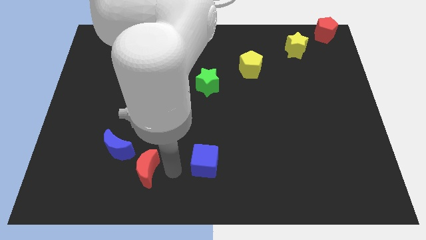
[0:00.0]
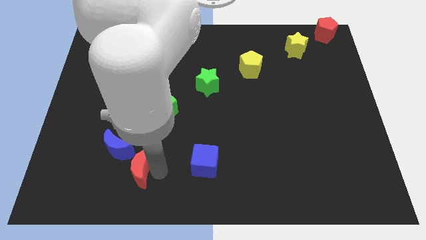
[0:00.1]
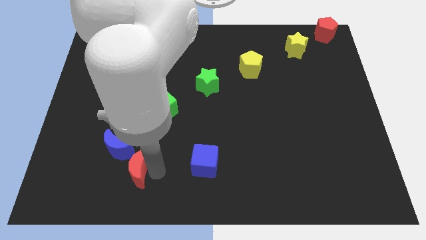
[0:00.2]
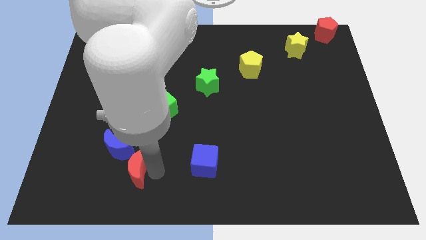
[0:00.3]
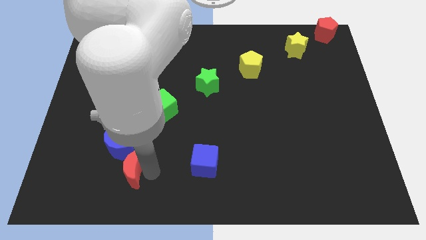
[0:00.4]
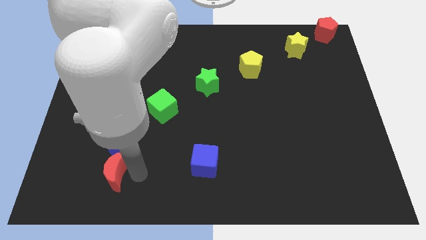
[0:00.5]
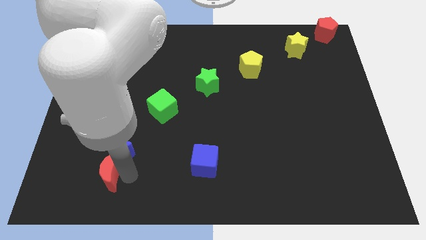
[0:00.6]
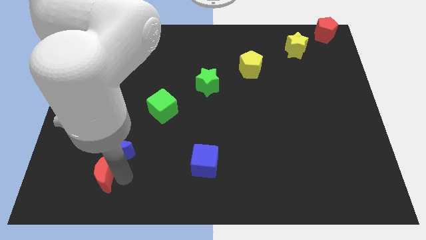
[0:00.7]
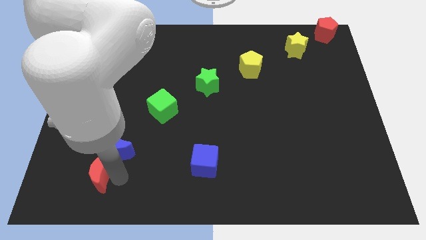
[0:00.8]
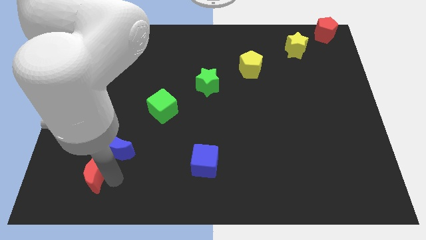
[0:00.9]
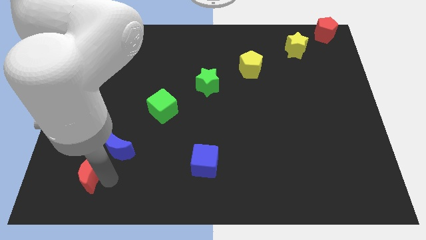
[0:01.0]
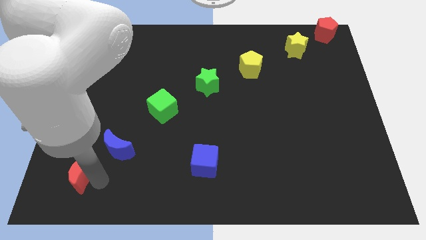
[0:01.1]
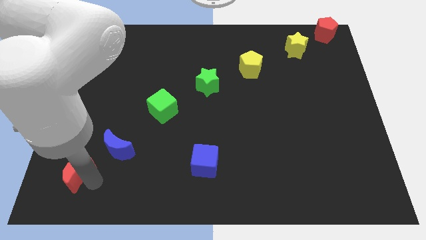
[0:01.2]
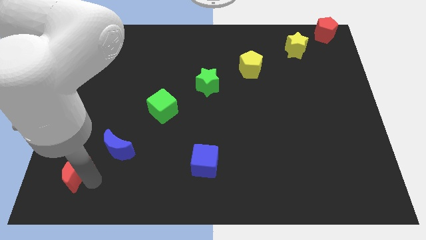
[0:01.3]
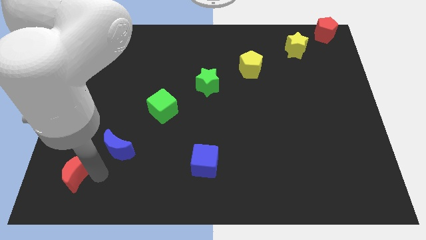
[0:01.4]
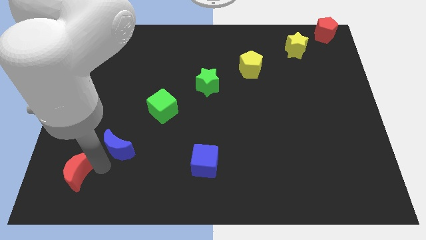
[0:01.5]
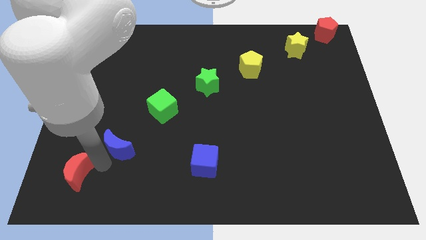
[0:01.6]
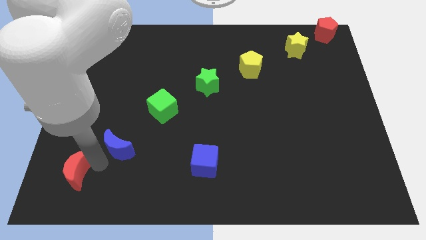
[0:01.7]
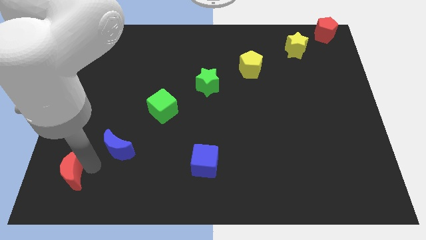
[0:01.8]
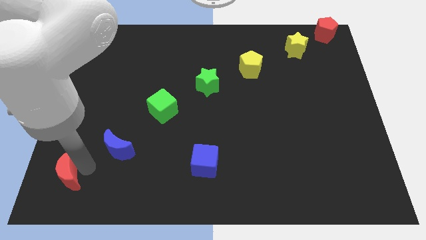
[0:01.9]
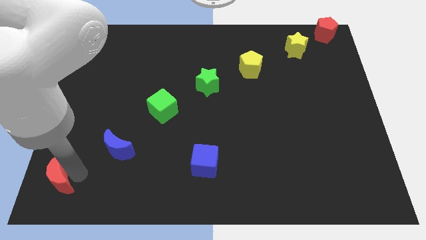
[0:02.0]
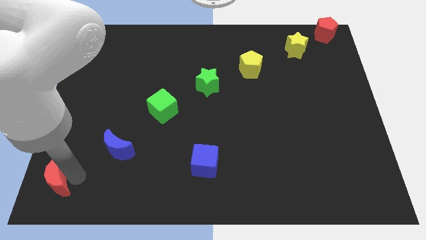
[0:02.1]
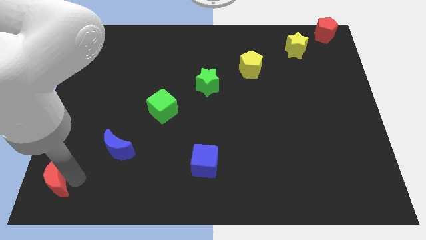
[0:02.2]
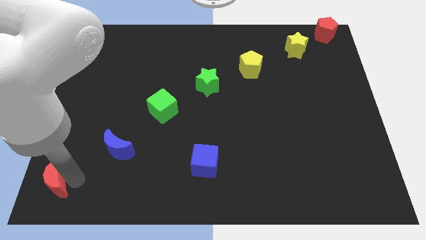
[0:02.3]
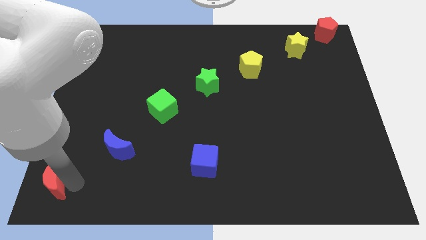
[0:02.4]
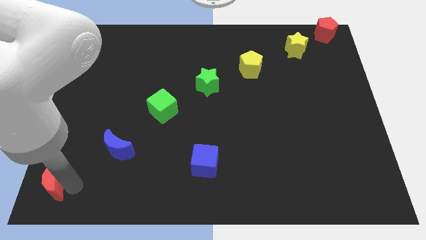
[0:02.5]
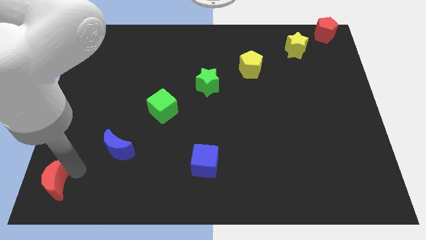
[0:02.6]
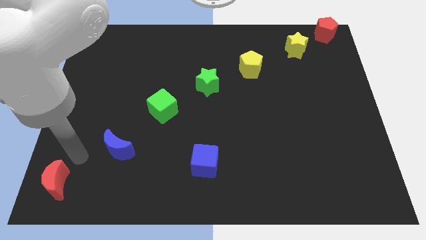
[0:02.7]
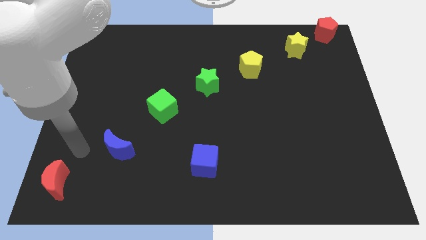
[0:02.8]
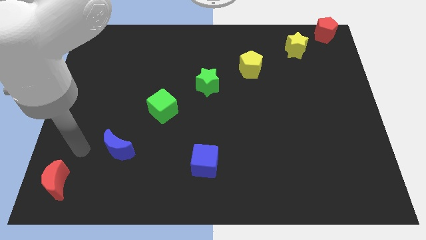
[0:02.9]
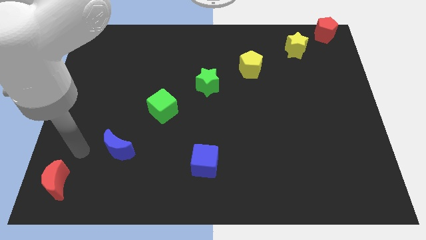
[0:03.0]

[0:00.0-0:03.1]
push the red crescent towards the bottom left side of the board

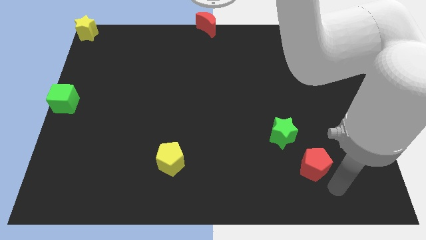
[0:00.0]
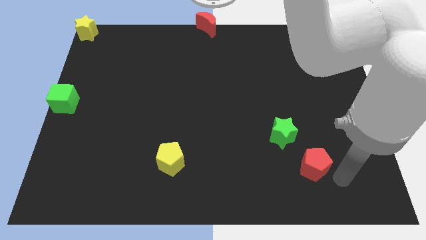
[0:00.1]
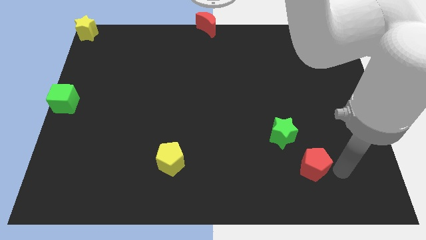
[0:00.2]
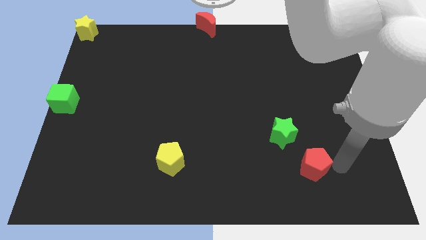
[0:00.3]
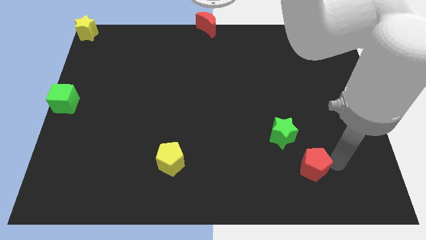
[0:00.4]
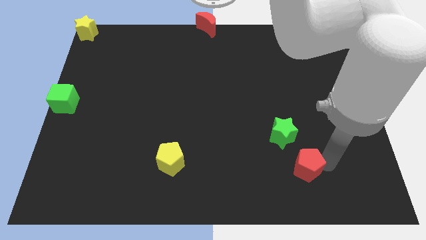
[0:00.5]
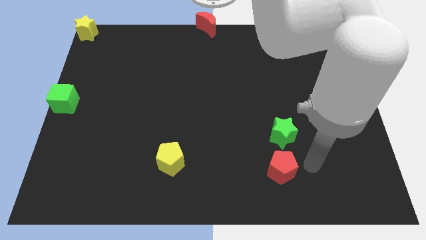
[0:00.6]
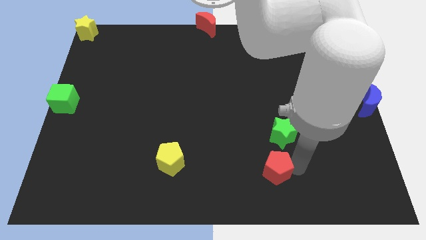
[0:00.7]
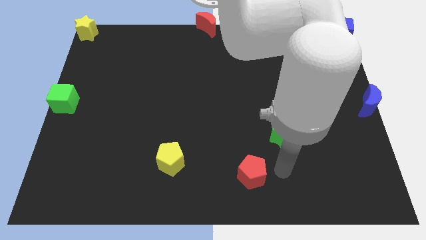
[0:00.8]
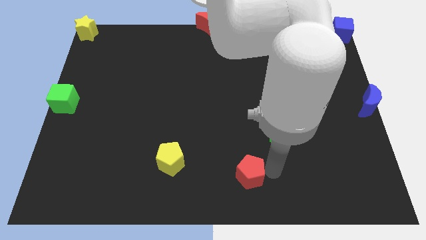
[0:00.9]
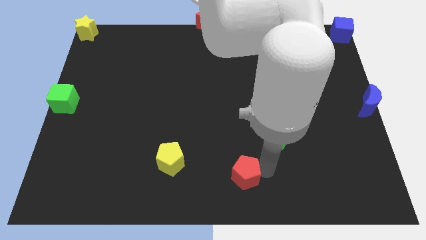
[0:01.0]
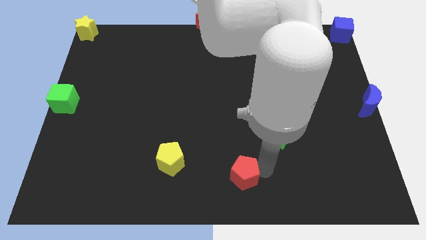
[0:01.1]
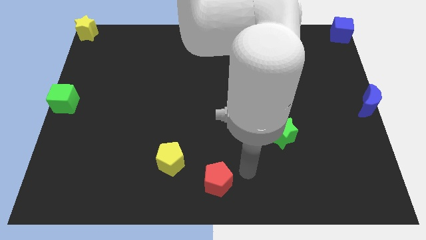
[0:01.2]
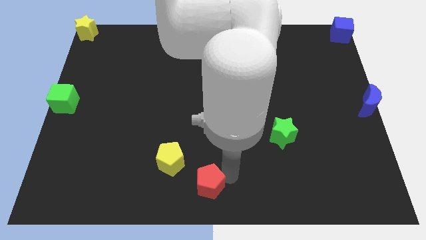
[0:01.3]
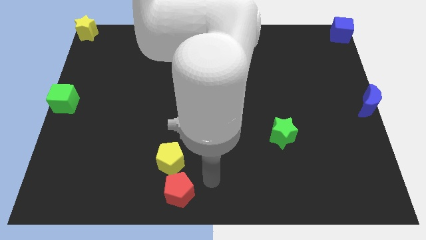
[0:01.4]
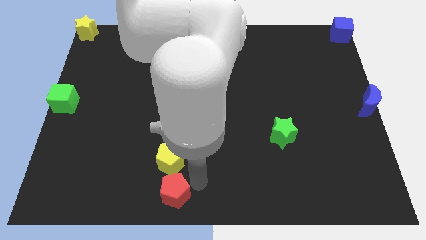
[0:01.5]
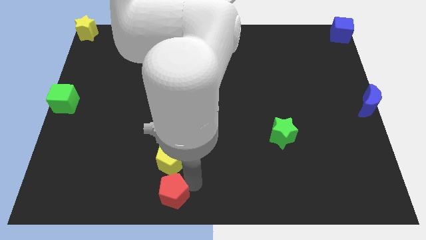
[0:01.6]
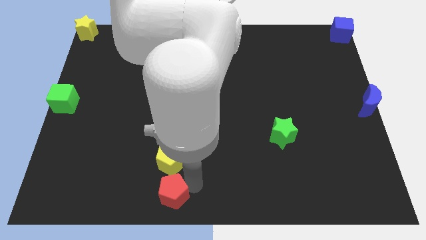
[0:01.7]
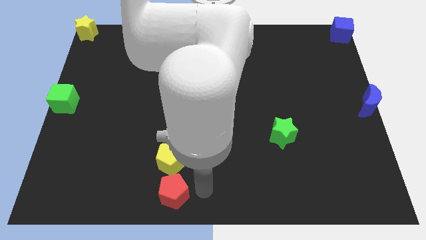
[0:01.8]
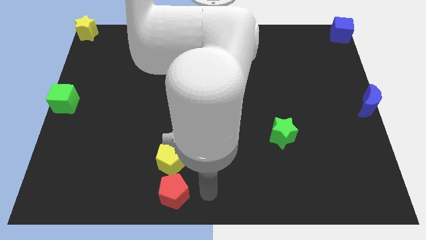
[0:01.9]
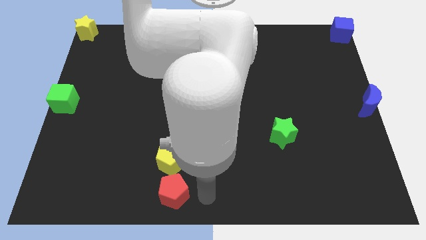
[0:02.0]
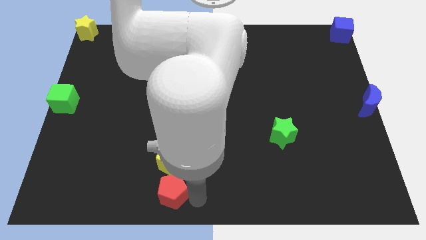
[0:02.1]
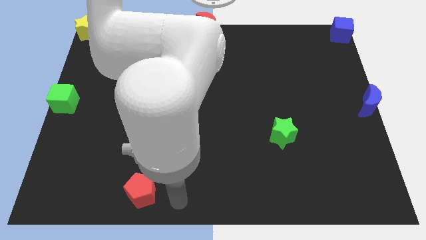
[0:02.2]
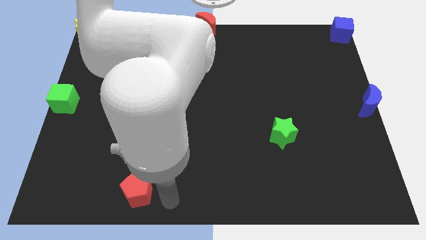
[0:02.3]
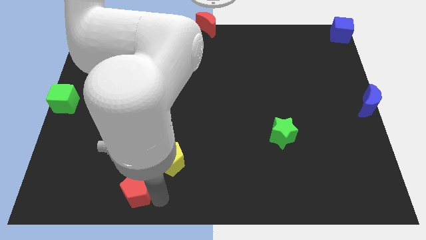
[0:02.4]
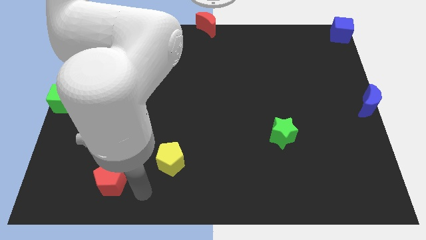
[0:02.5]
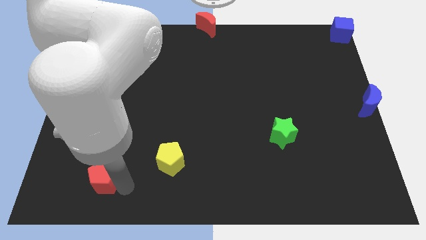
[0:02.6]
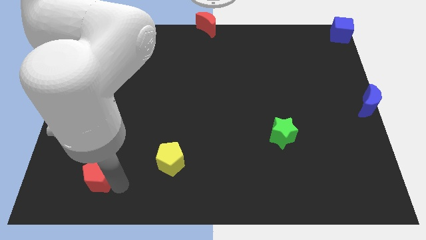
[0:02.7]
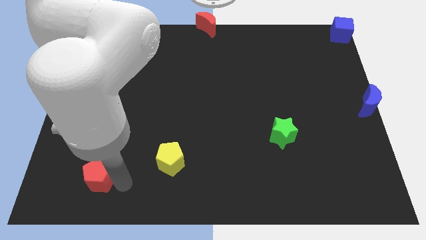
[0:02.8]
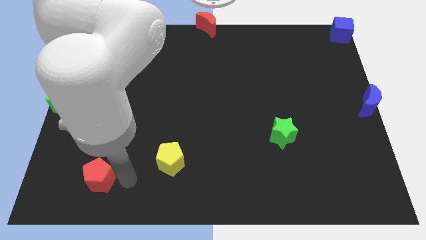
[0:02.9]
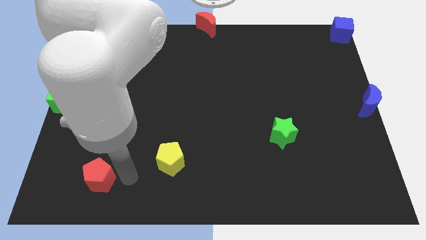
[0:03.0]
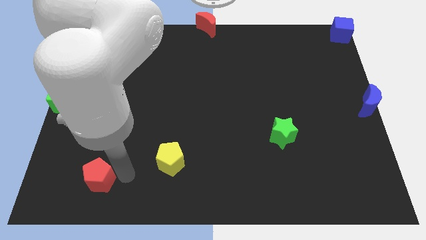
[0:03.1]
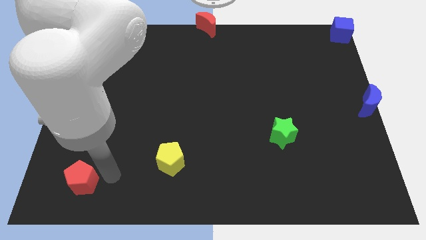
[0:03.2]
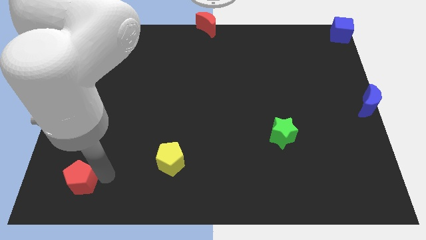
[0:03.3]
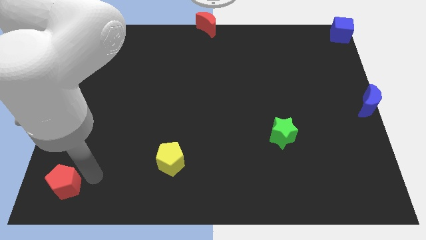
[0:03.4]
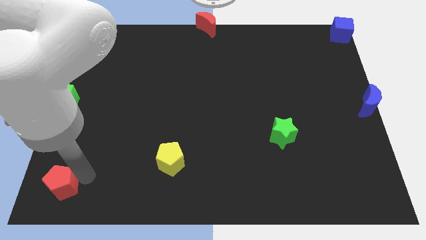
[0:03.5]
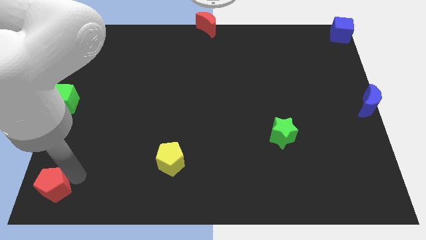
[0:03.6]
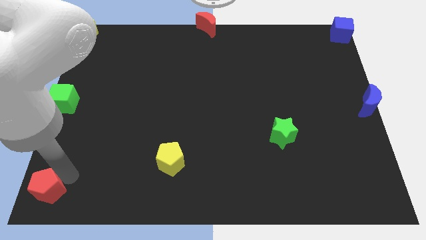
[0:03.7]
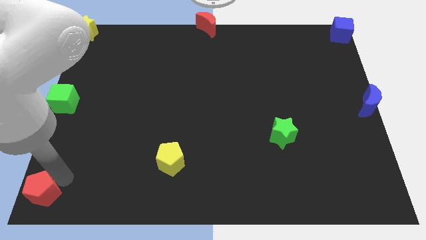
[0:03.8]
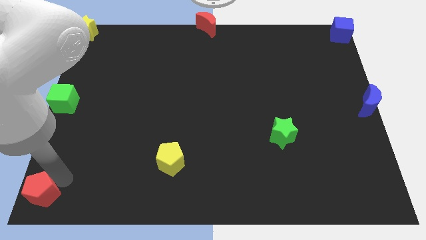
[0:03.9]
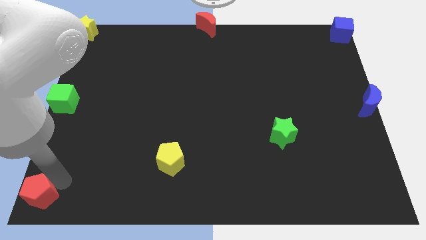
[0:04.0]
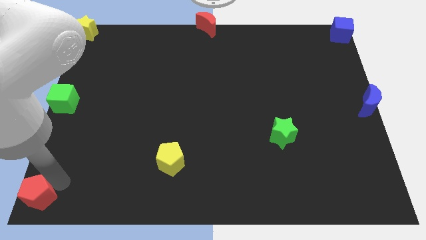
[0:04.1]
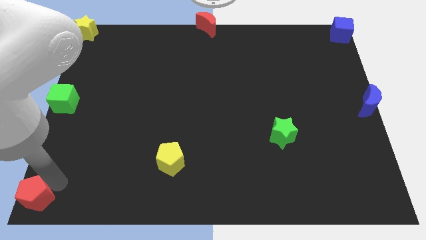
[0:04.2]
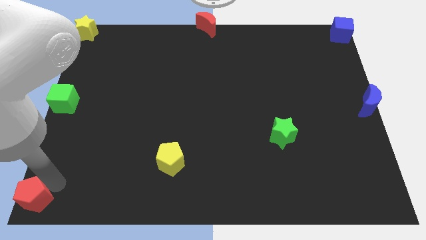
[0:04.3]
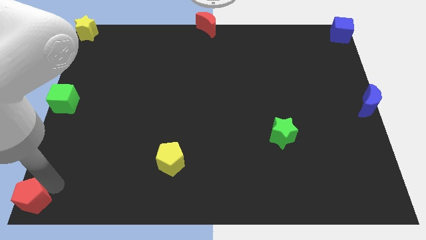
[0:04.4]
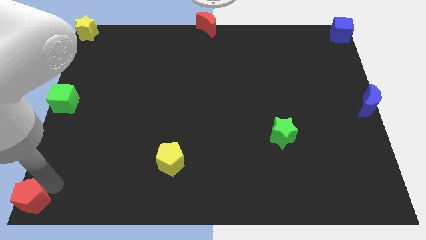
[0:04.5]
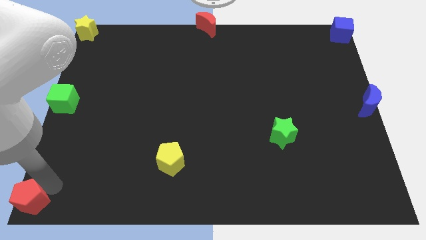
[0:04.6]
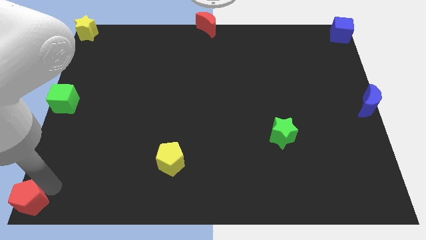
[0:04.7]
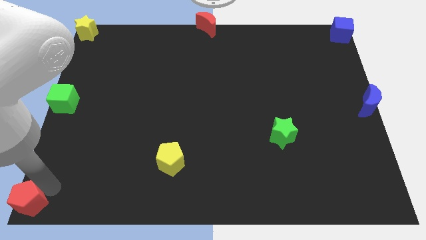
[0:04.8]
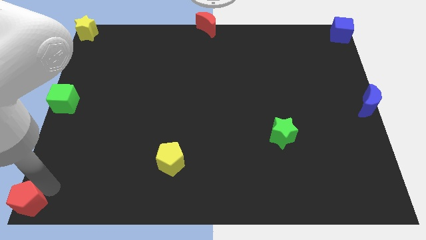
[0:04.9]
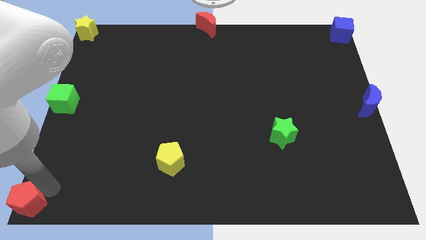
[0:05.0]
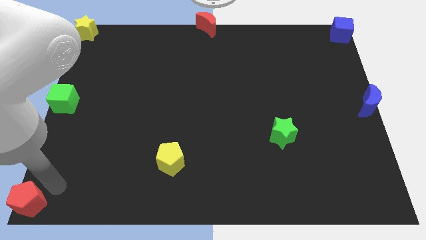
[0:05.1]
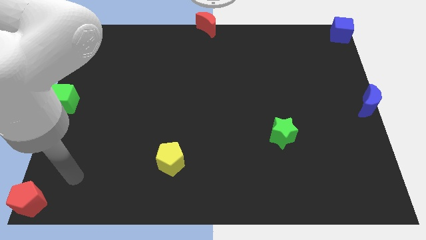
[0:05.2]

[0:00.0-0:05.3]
place the red pentagon to the bottom left corner

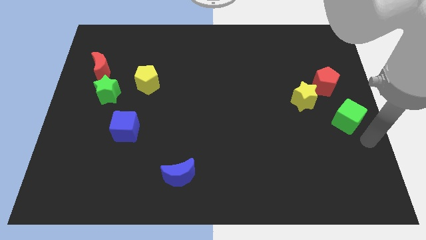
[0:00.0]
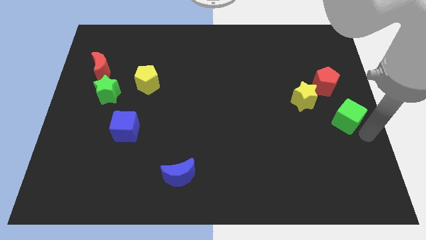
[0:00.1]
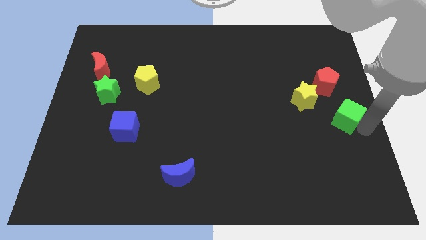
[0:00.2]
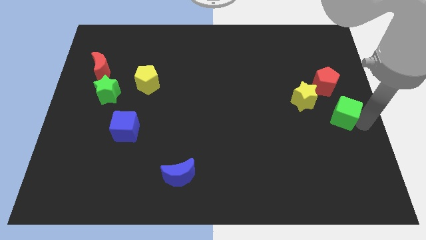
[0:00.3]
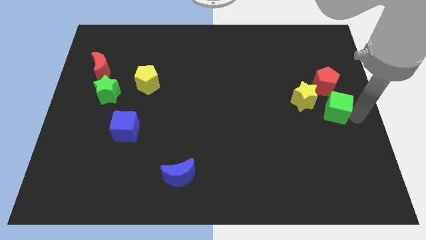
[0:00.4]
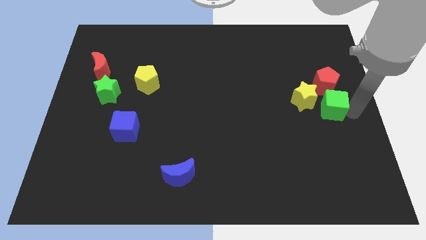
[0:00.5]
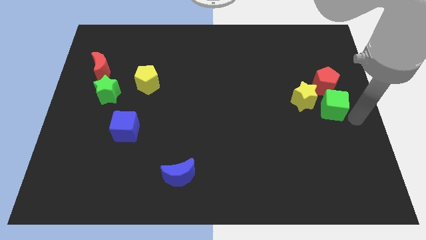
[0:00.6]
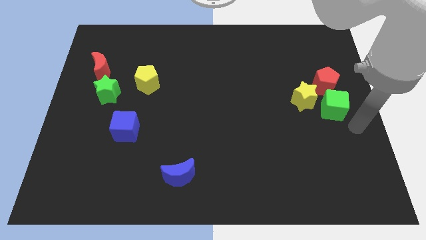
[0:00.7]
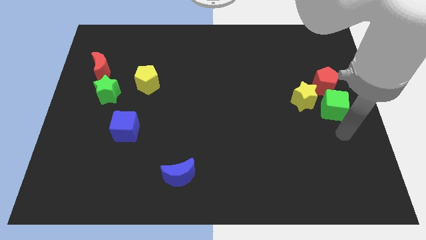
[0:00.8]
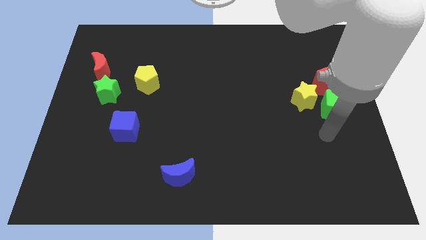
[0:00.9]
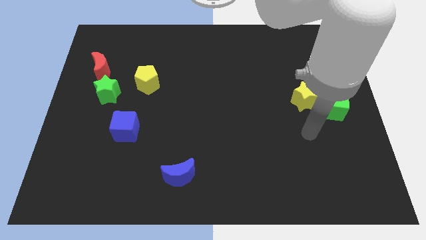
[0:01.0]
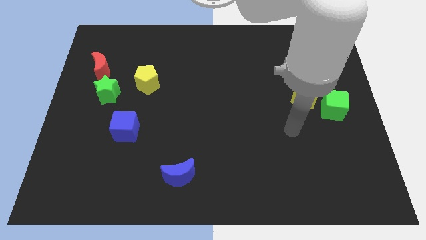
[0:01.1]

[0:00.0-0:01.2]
place green cube below red pentagon
